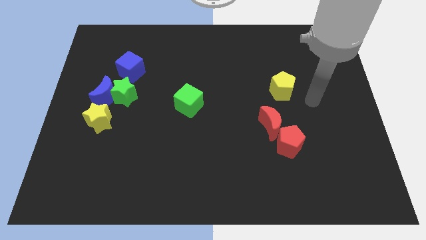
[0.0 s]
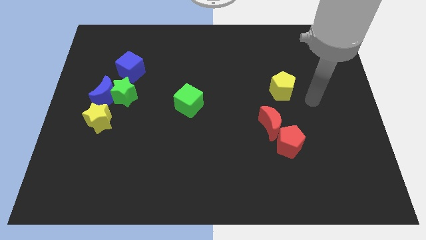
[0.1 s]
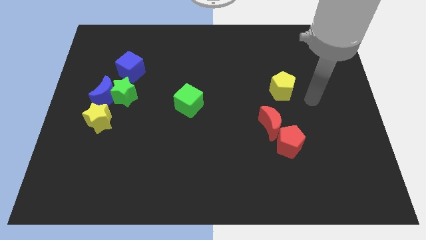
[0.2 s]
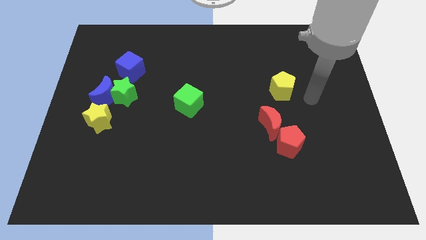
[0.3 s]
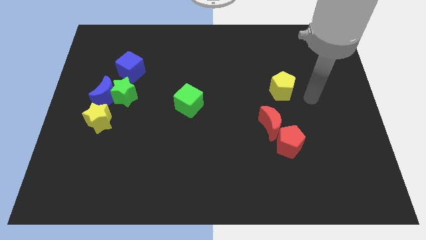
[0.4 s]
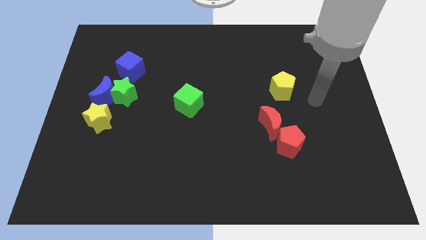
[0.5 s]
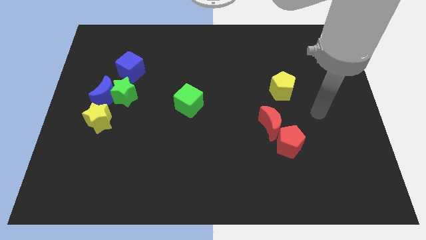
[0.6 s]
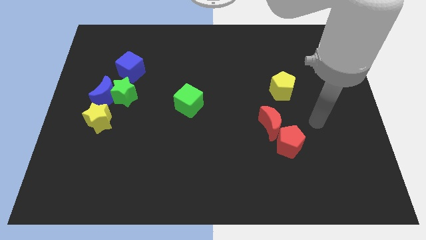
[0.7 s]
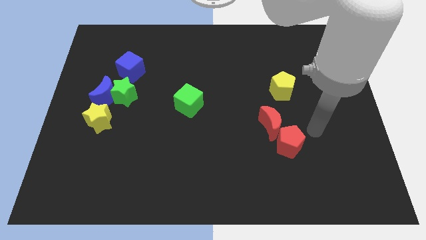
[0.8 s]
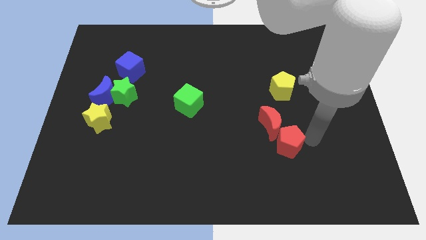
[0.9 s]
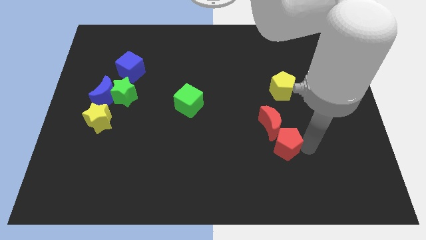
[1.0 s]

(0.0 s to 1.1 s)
tap the right side of red pentagon

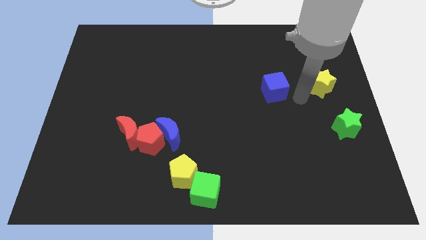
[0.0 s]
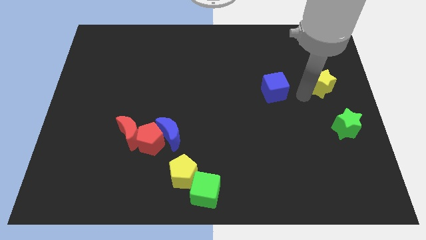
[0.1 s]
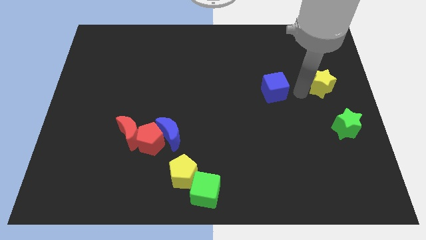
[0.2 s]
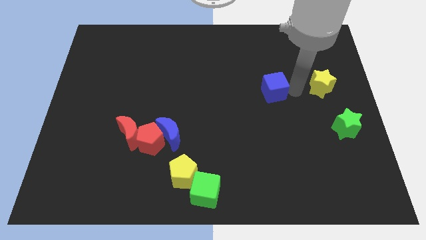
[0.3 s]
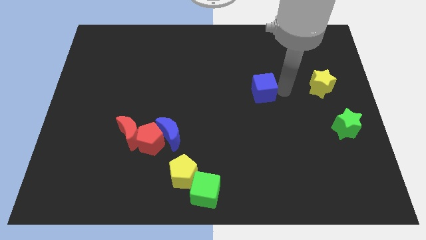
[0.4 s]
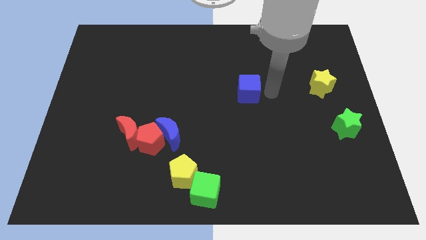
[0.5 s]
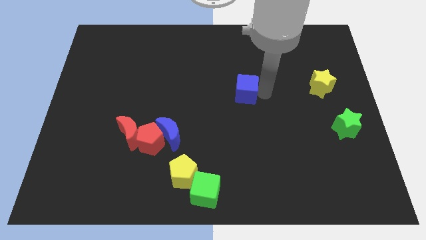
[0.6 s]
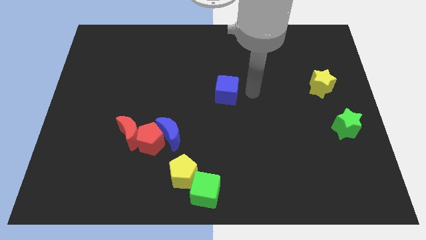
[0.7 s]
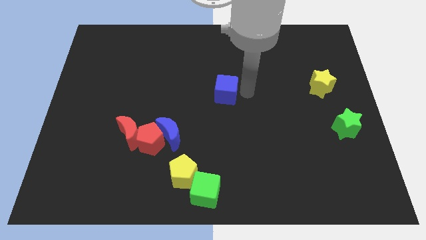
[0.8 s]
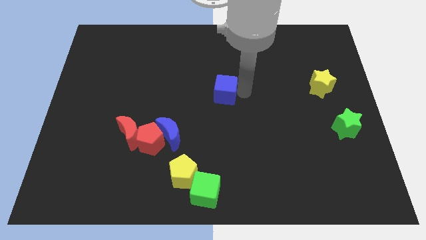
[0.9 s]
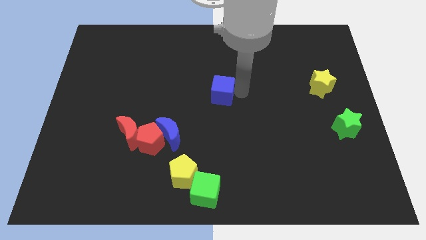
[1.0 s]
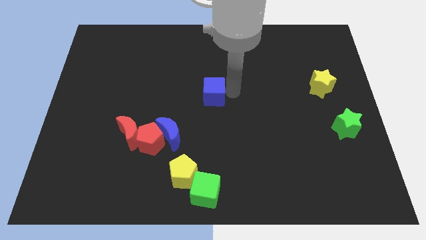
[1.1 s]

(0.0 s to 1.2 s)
place the blue cube at center of the board

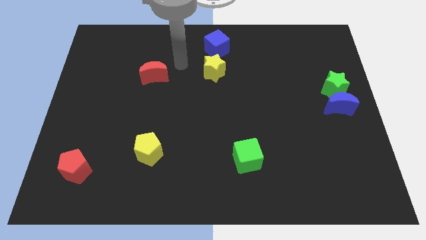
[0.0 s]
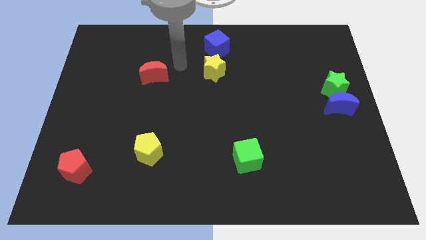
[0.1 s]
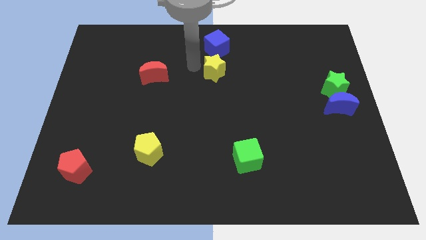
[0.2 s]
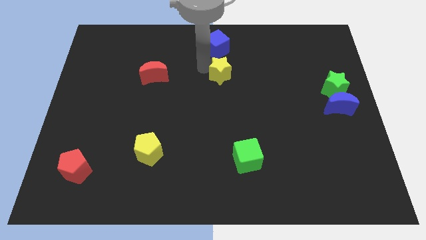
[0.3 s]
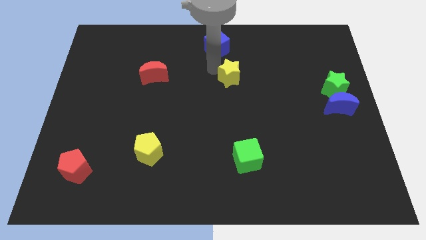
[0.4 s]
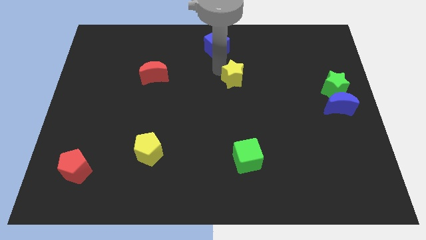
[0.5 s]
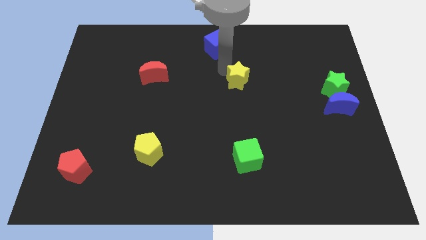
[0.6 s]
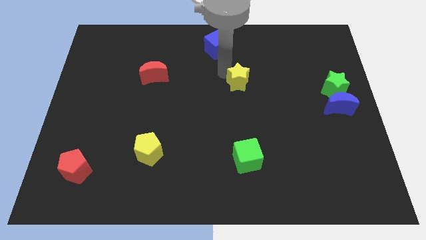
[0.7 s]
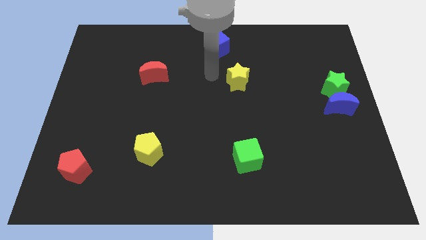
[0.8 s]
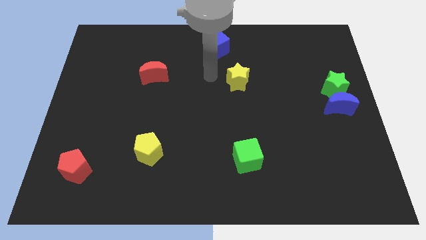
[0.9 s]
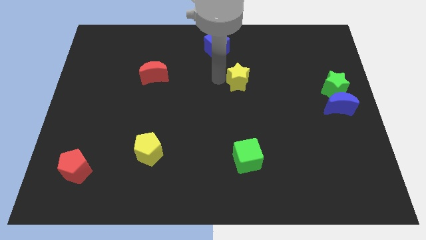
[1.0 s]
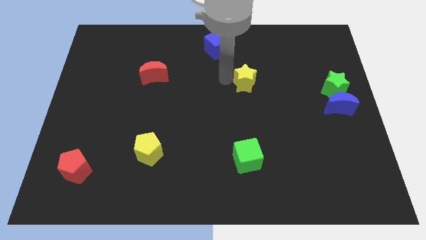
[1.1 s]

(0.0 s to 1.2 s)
move the yellow star above the green cube

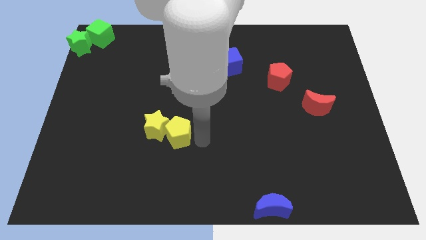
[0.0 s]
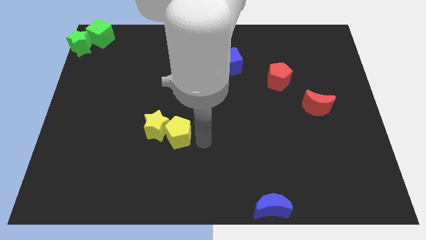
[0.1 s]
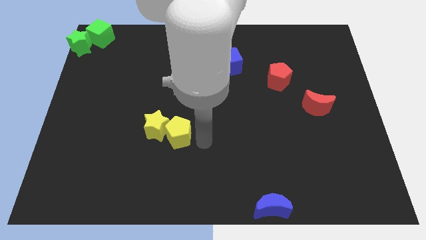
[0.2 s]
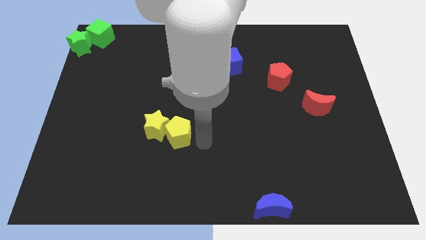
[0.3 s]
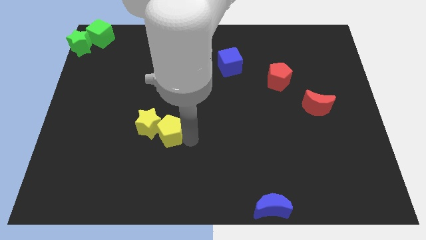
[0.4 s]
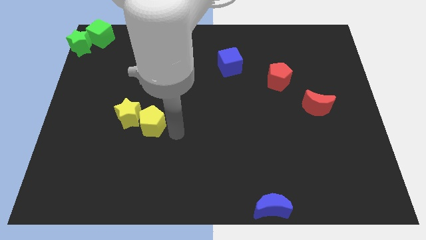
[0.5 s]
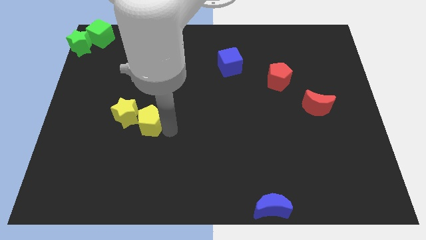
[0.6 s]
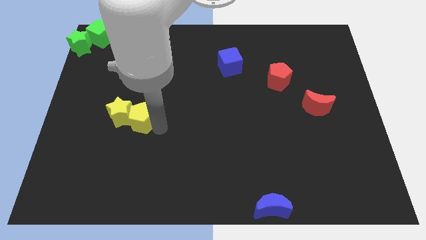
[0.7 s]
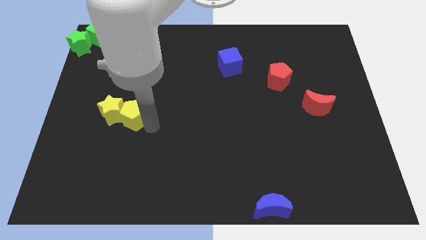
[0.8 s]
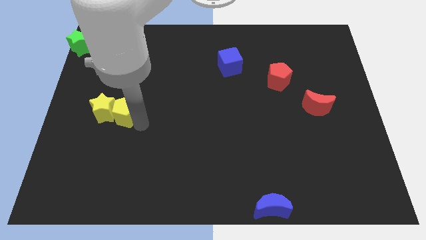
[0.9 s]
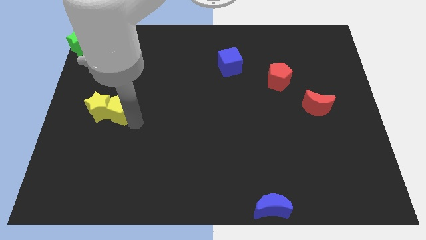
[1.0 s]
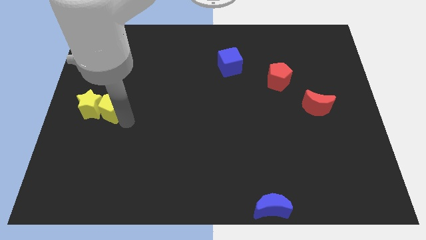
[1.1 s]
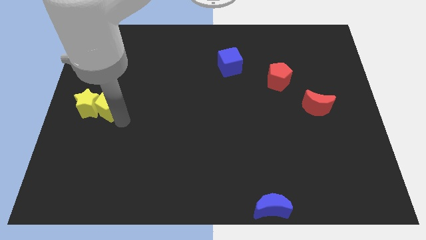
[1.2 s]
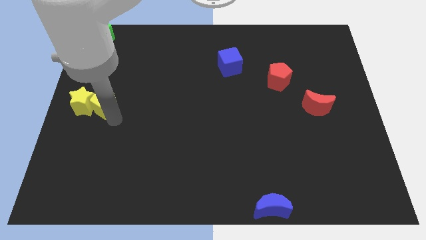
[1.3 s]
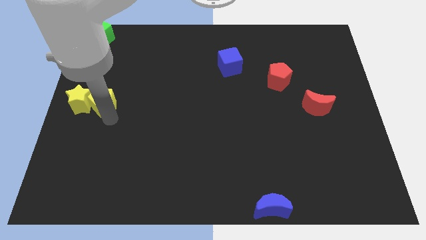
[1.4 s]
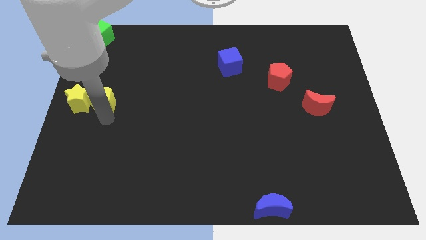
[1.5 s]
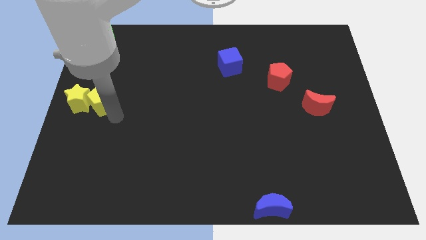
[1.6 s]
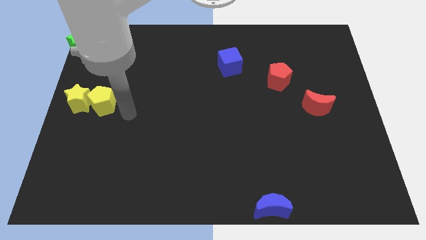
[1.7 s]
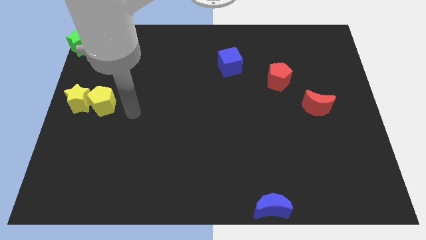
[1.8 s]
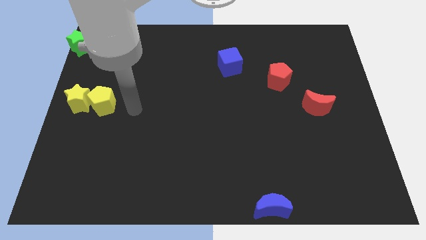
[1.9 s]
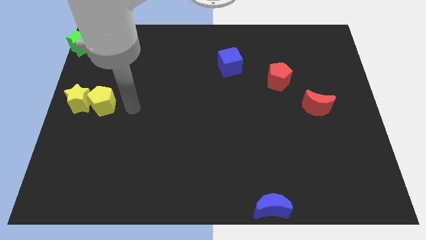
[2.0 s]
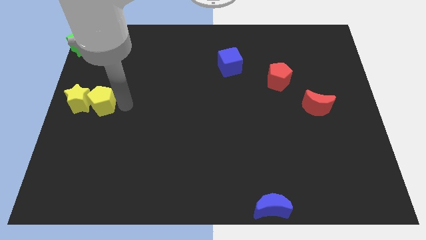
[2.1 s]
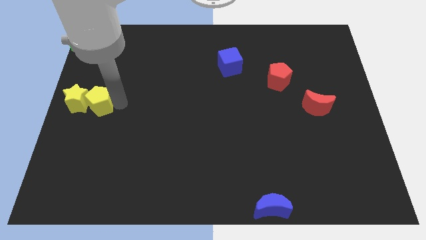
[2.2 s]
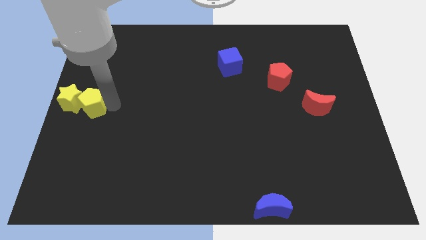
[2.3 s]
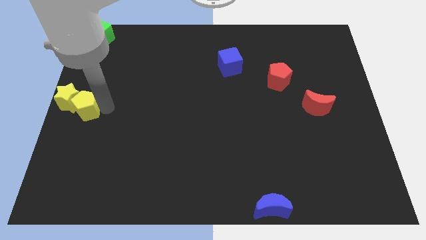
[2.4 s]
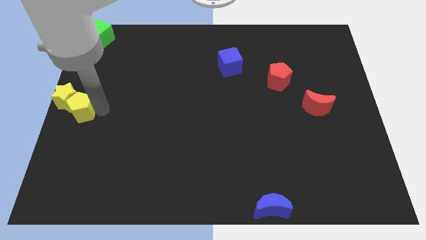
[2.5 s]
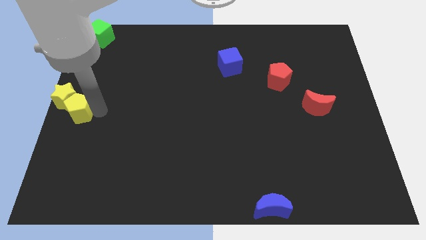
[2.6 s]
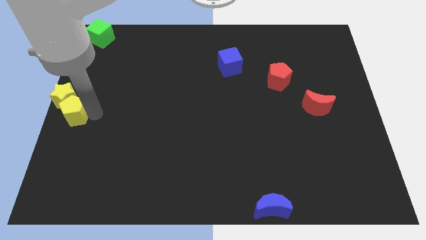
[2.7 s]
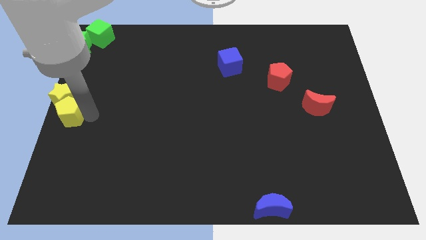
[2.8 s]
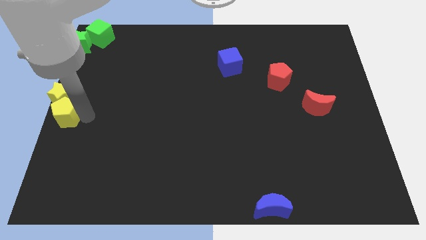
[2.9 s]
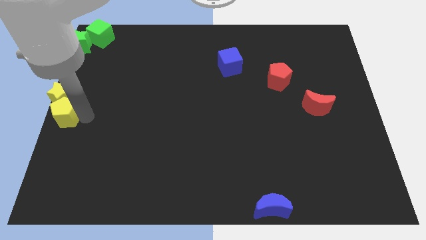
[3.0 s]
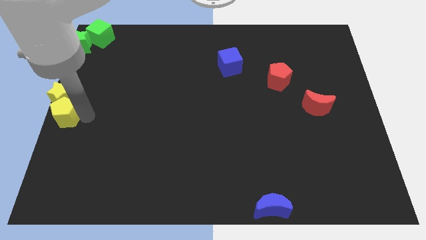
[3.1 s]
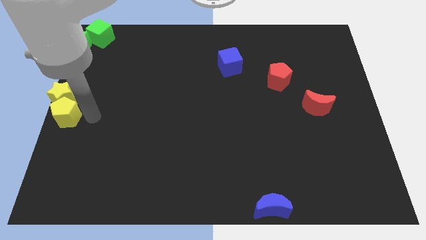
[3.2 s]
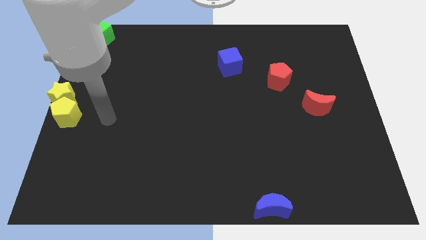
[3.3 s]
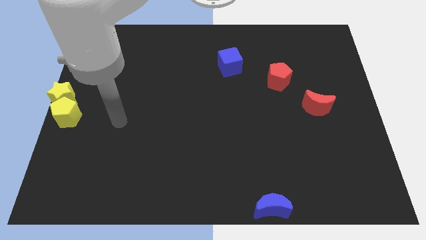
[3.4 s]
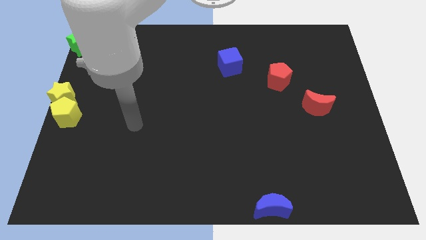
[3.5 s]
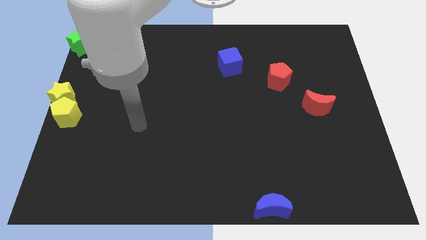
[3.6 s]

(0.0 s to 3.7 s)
move yellow star and yellow pentagon towards the center left of the board

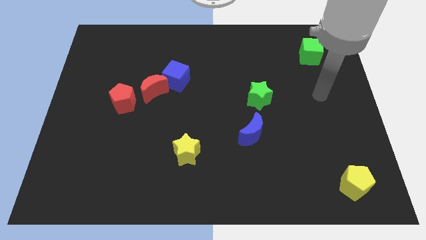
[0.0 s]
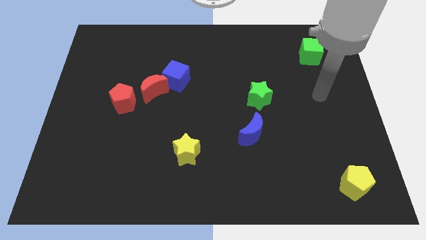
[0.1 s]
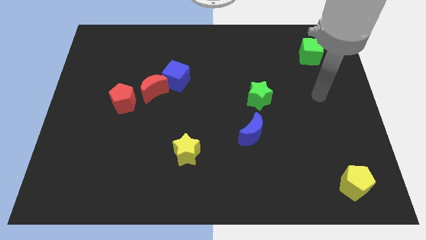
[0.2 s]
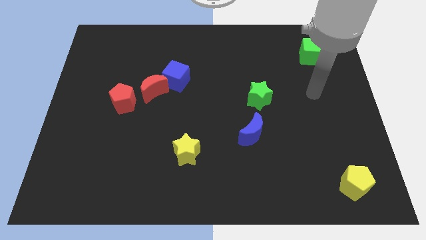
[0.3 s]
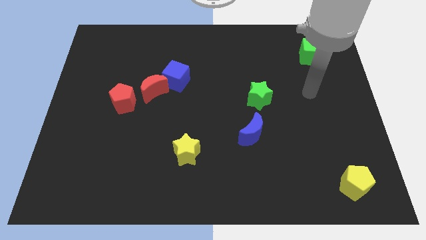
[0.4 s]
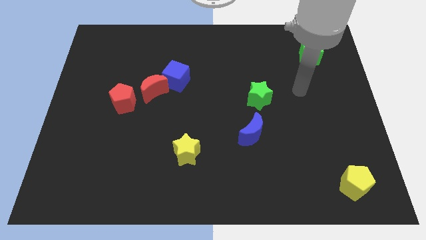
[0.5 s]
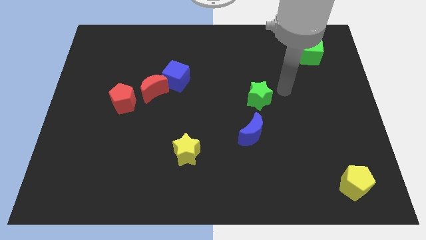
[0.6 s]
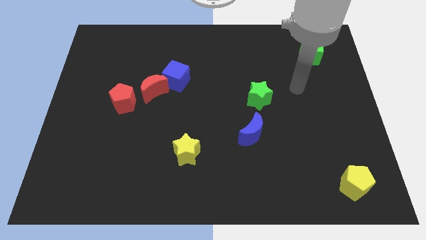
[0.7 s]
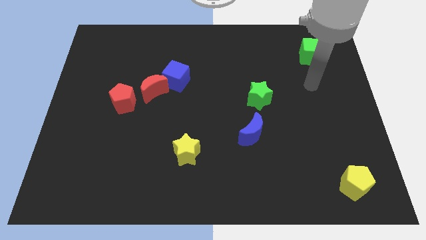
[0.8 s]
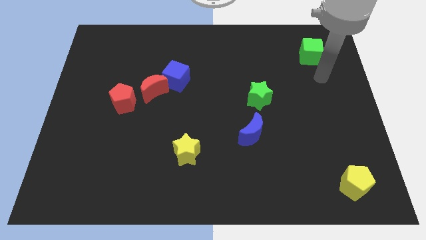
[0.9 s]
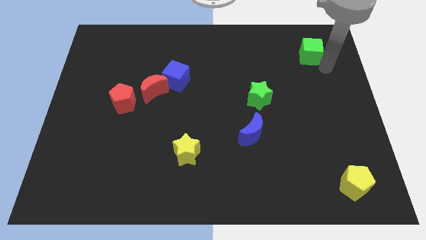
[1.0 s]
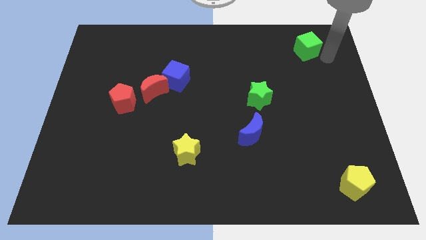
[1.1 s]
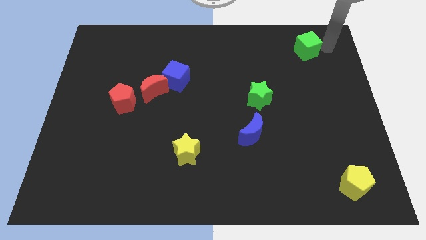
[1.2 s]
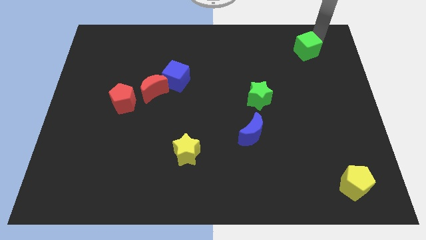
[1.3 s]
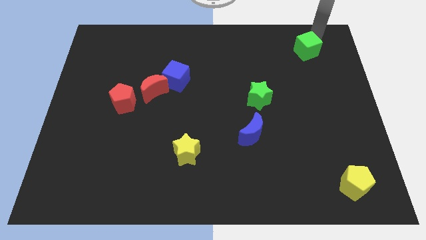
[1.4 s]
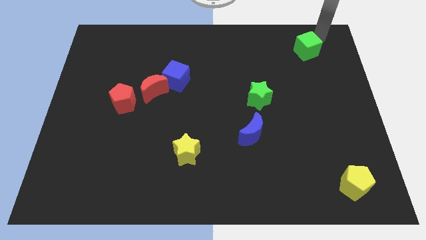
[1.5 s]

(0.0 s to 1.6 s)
place your arm to the top of green cube

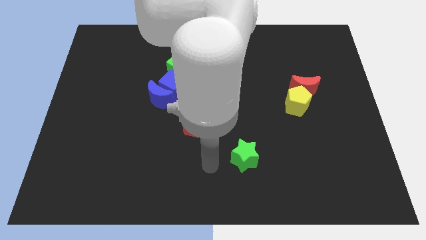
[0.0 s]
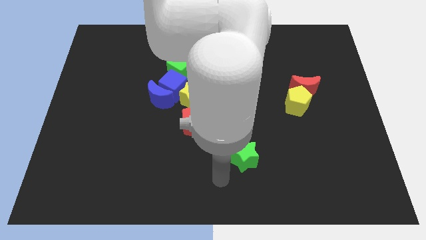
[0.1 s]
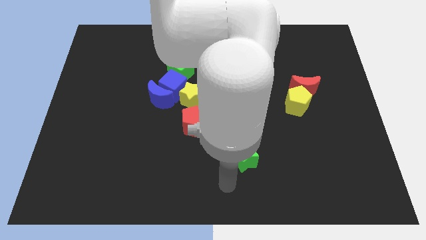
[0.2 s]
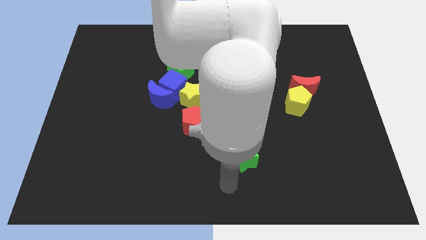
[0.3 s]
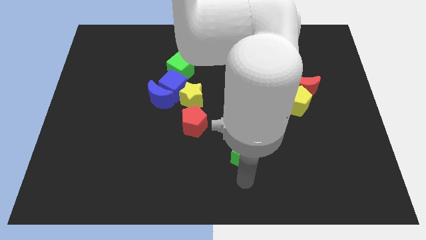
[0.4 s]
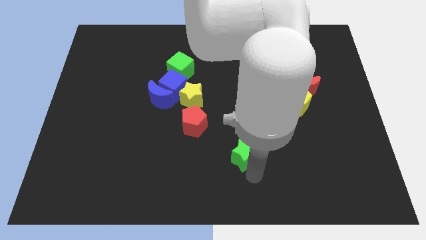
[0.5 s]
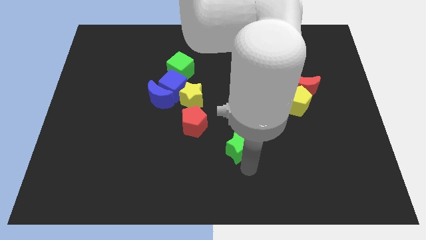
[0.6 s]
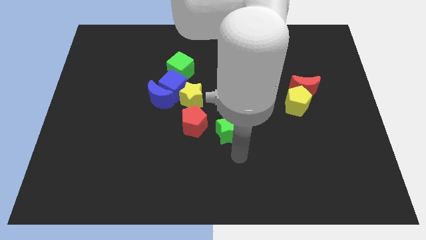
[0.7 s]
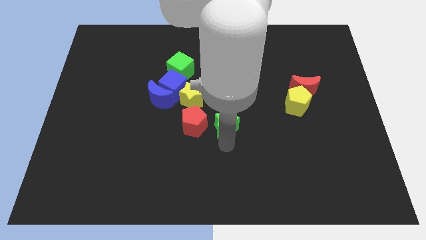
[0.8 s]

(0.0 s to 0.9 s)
place green star horizontal right to the red pentagon
